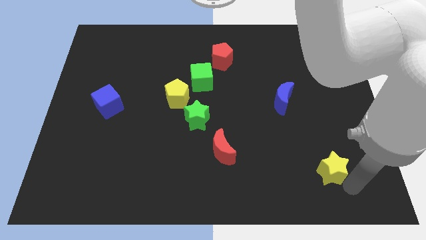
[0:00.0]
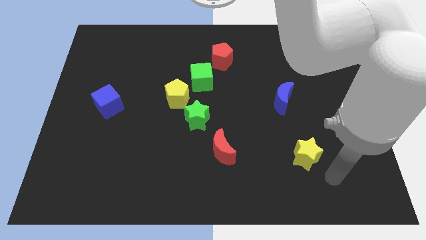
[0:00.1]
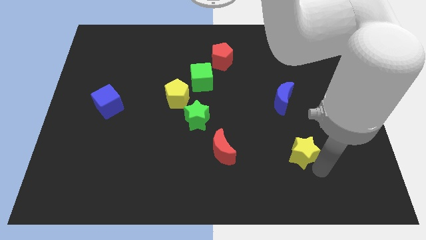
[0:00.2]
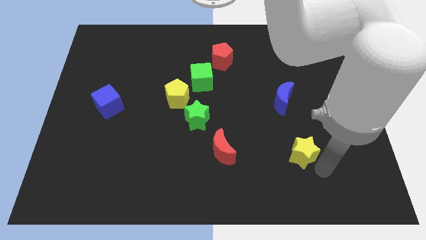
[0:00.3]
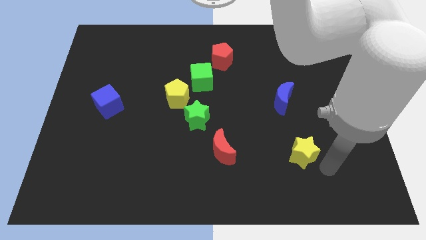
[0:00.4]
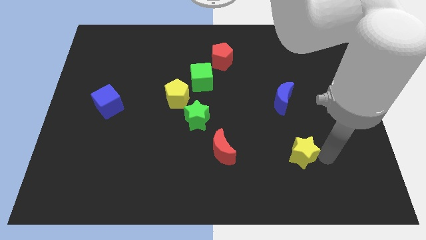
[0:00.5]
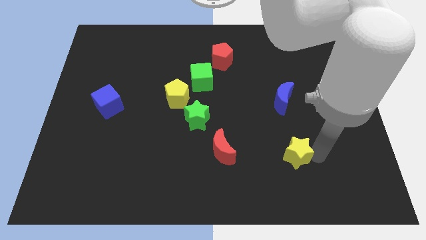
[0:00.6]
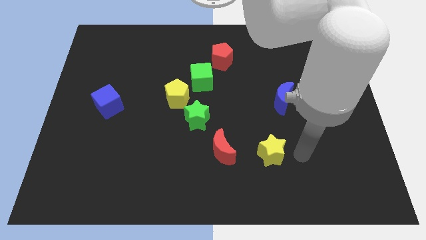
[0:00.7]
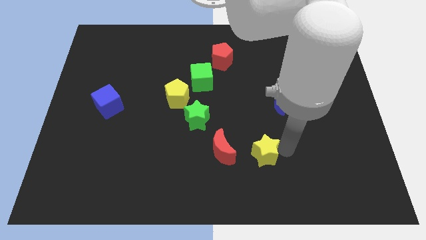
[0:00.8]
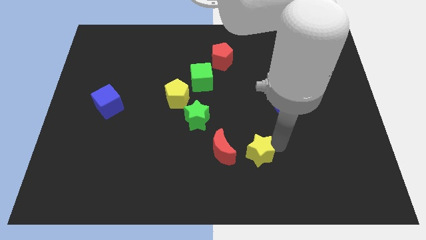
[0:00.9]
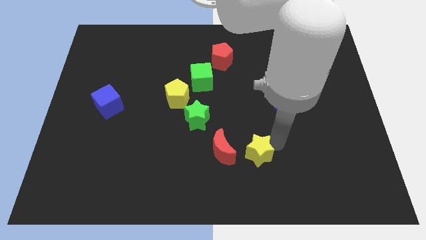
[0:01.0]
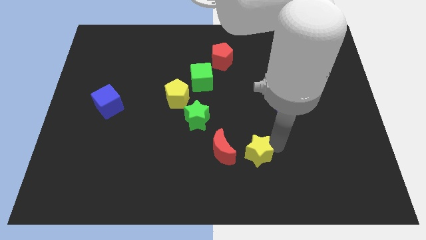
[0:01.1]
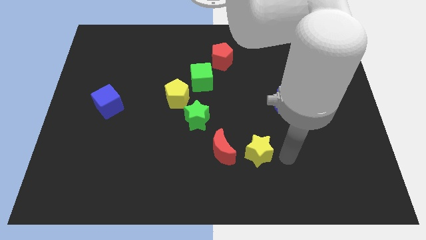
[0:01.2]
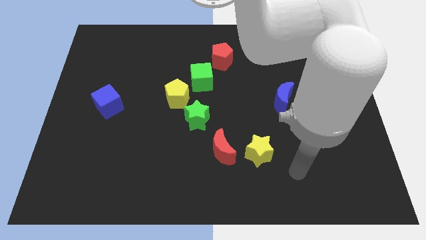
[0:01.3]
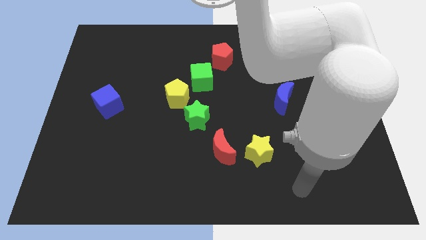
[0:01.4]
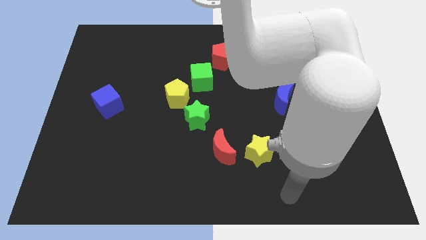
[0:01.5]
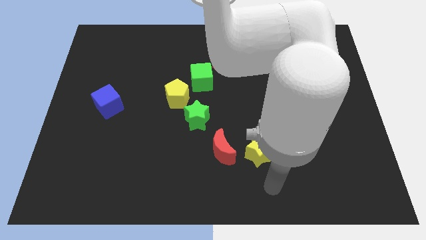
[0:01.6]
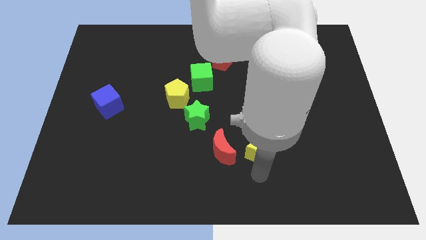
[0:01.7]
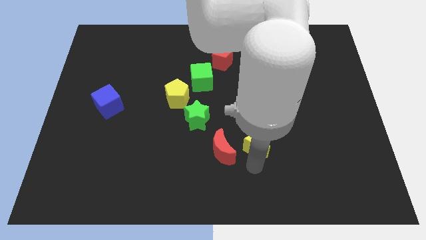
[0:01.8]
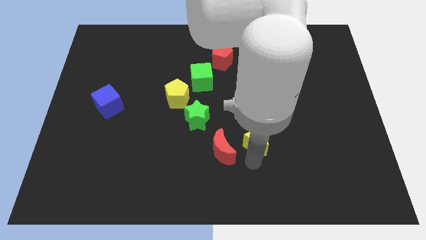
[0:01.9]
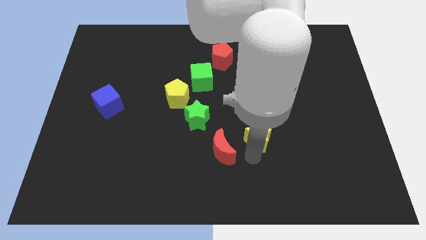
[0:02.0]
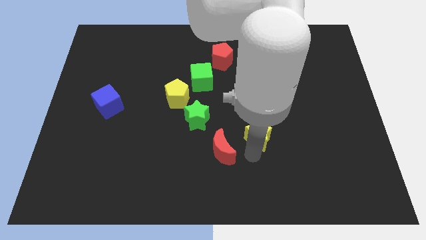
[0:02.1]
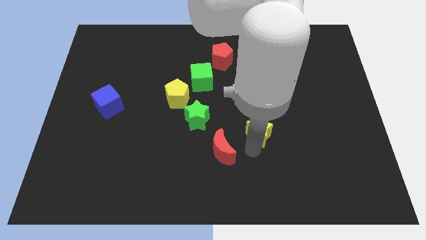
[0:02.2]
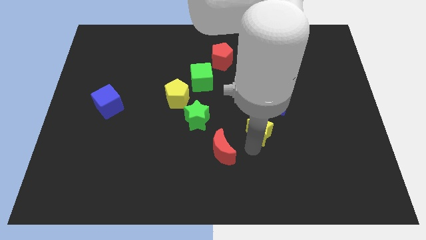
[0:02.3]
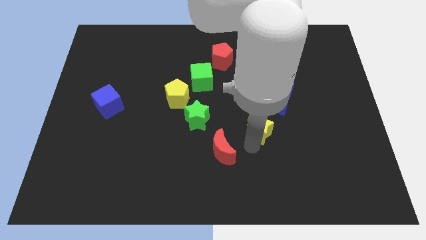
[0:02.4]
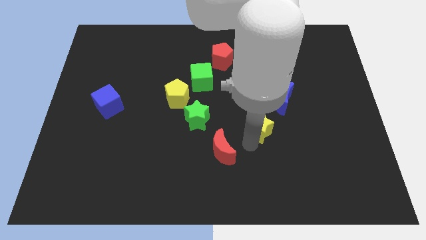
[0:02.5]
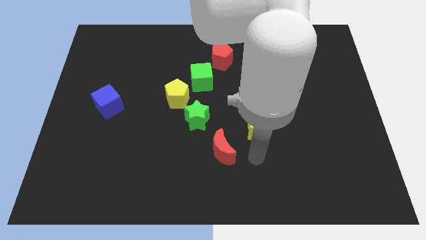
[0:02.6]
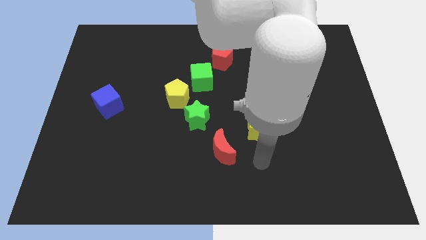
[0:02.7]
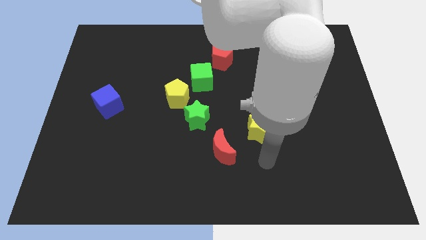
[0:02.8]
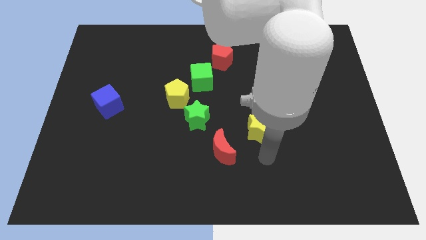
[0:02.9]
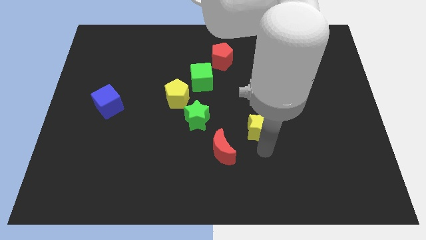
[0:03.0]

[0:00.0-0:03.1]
move yellow star to the right above red moon

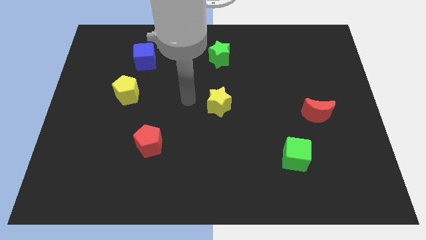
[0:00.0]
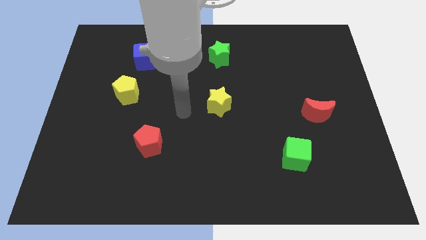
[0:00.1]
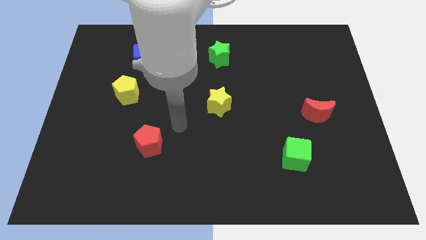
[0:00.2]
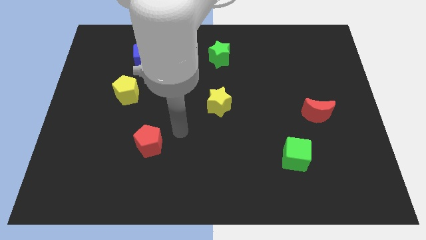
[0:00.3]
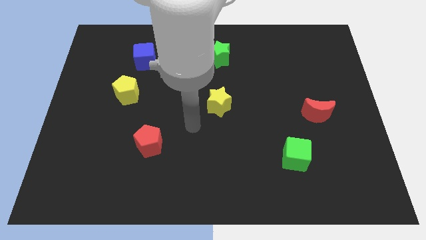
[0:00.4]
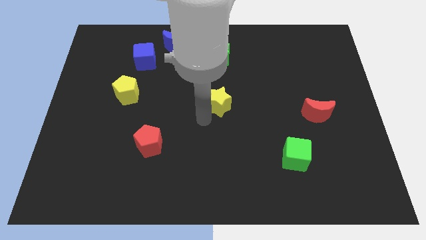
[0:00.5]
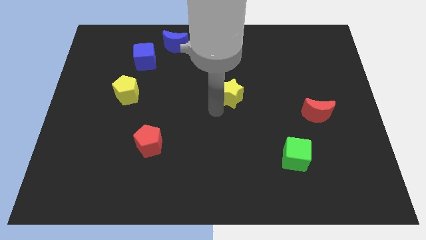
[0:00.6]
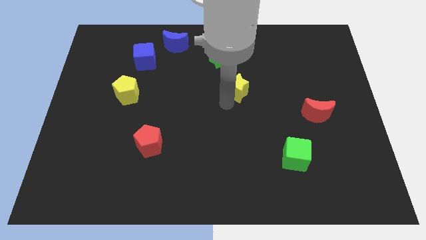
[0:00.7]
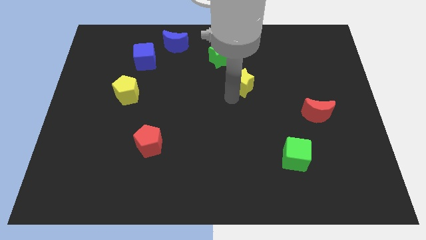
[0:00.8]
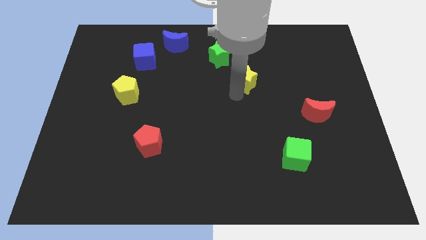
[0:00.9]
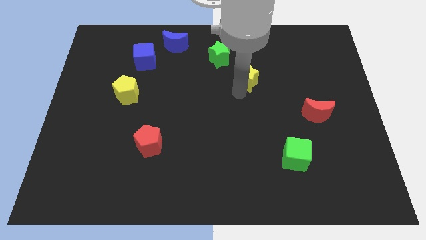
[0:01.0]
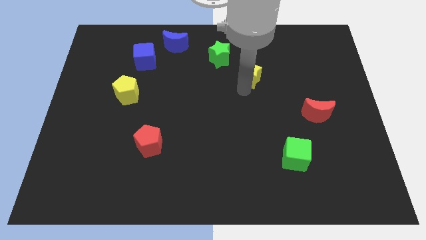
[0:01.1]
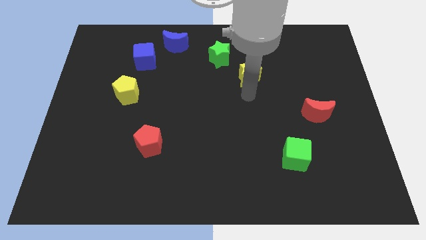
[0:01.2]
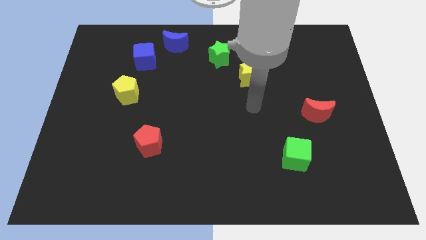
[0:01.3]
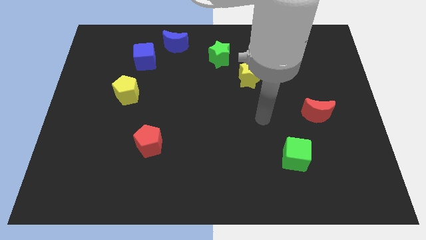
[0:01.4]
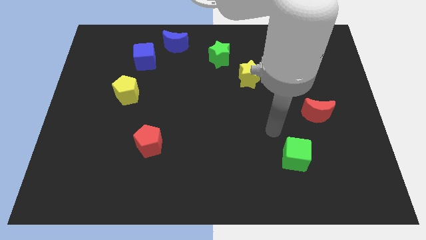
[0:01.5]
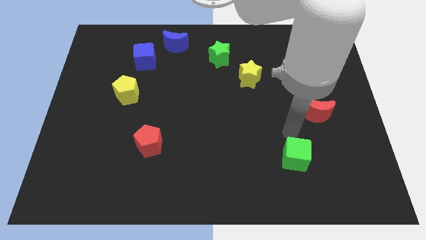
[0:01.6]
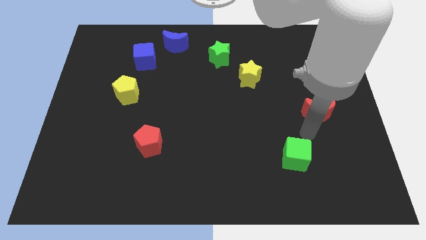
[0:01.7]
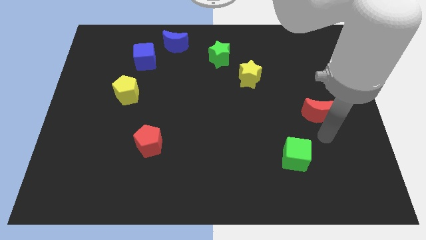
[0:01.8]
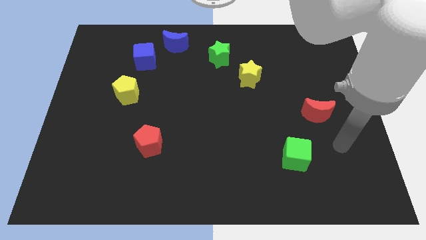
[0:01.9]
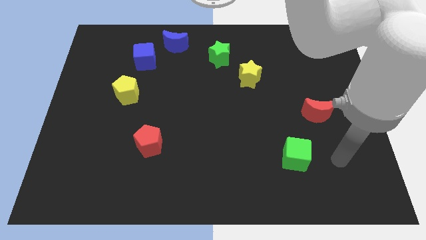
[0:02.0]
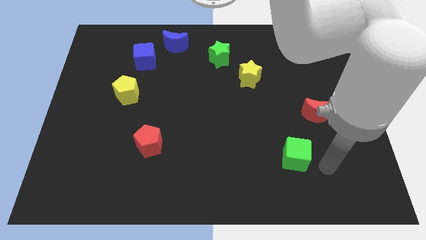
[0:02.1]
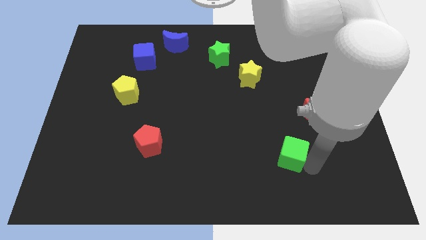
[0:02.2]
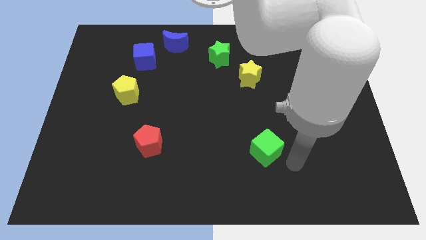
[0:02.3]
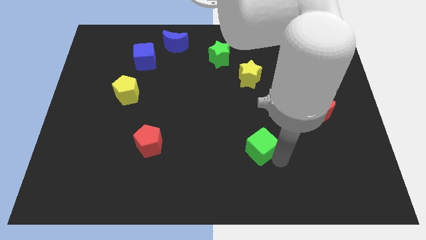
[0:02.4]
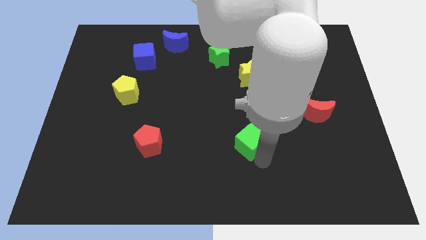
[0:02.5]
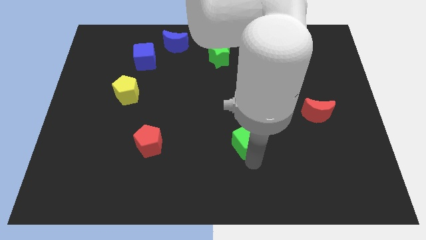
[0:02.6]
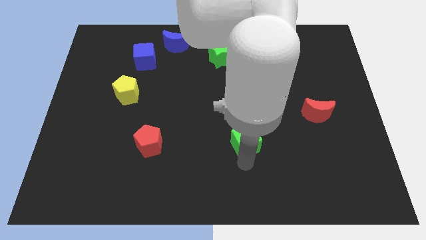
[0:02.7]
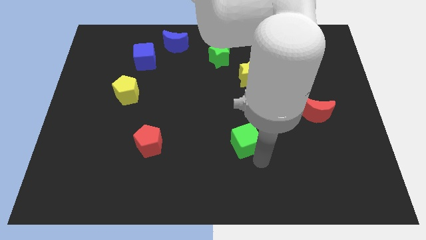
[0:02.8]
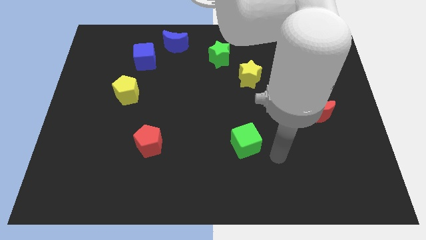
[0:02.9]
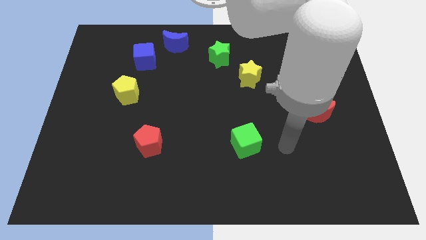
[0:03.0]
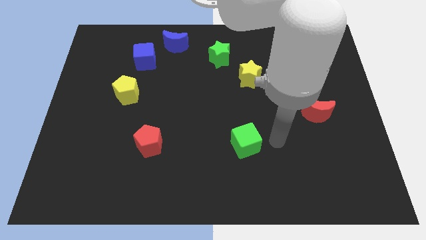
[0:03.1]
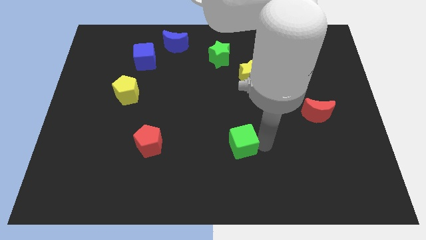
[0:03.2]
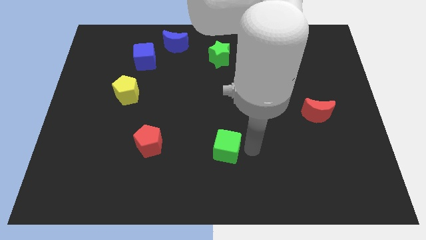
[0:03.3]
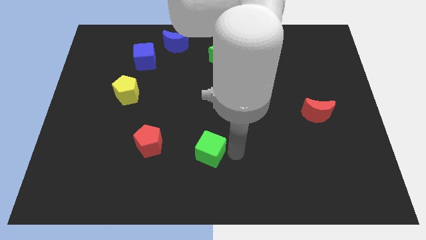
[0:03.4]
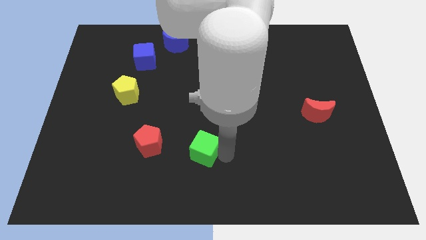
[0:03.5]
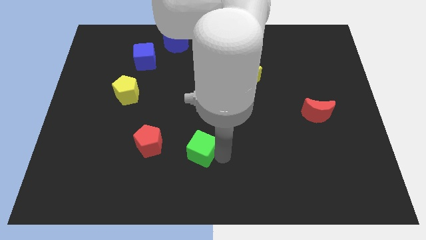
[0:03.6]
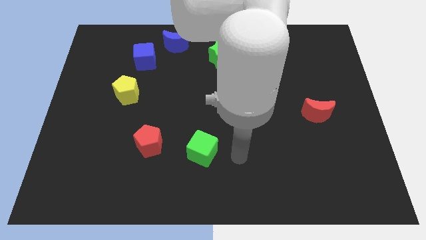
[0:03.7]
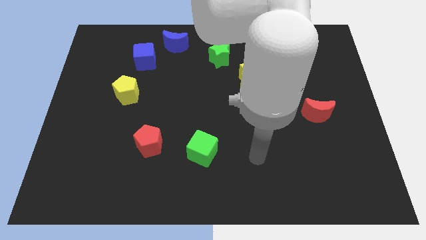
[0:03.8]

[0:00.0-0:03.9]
push the green cube towards the right to the red pentagon

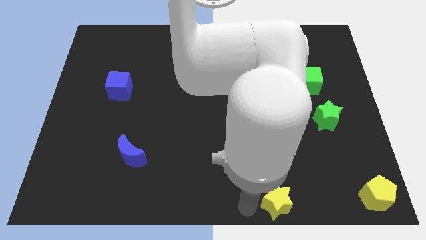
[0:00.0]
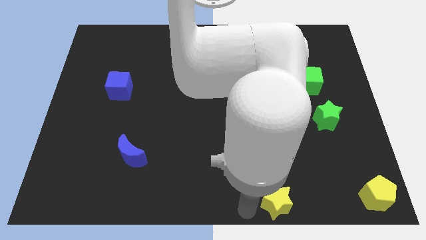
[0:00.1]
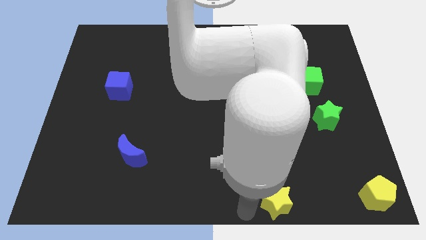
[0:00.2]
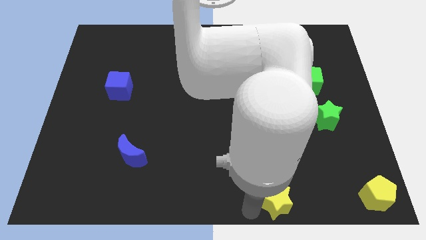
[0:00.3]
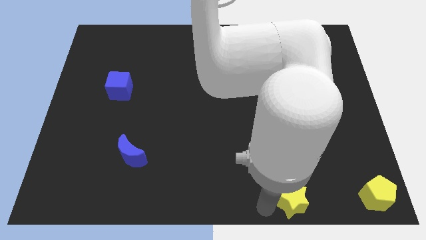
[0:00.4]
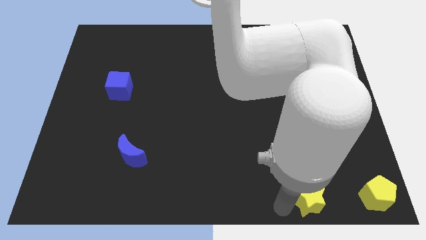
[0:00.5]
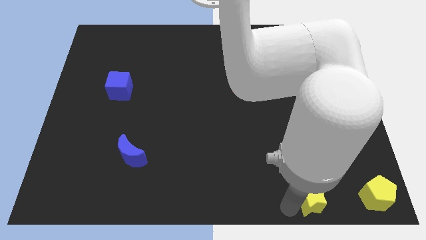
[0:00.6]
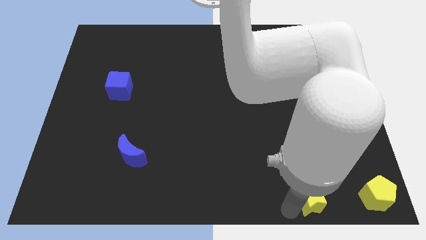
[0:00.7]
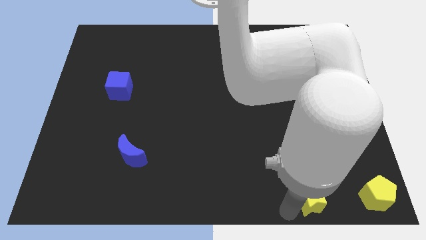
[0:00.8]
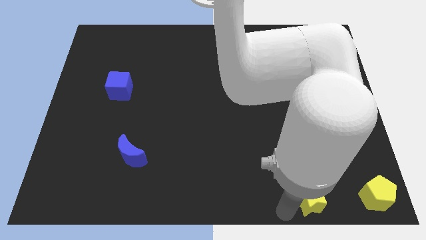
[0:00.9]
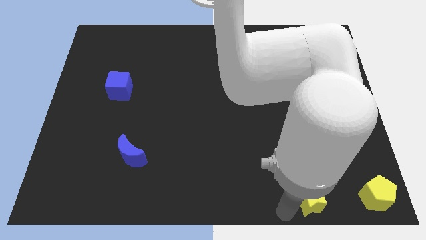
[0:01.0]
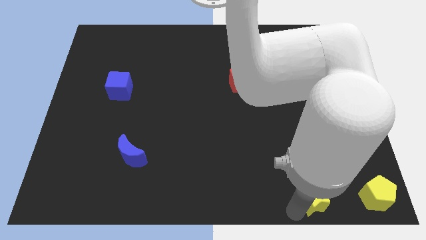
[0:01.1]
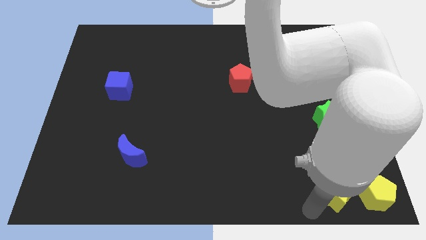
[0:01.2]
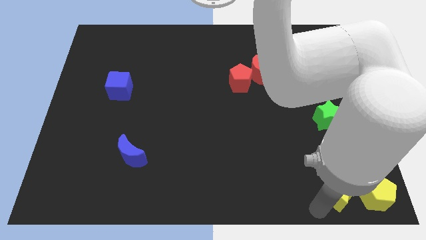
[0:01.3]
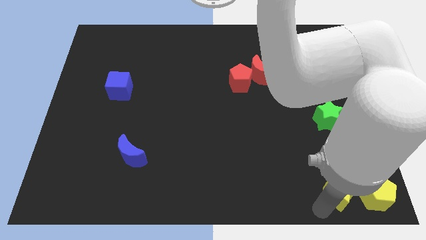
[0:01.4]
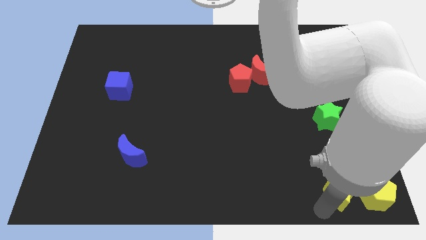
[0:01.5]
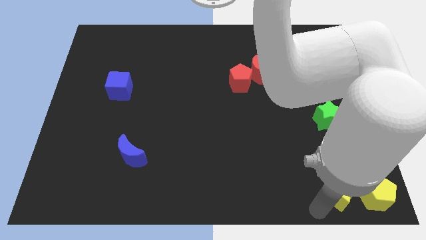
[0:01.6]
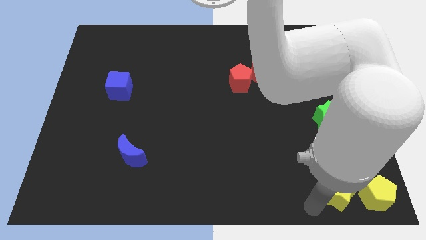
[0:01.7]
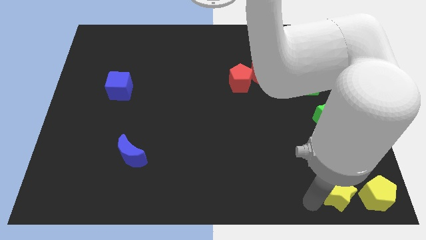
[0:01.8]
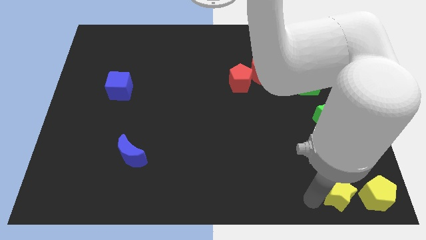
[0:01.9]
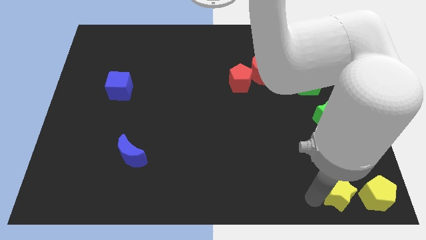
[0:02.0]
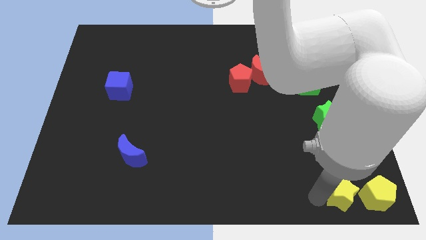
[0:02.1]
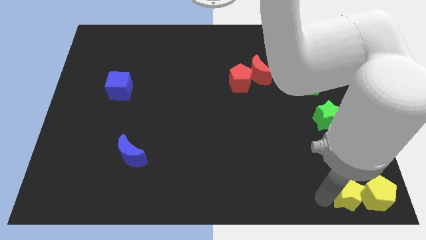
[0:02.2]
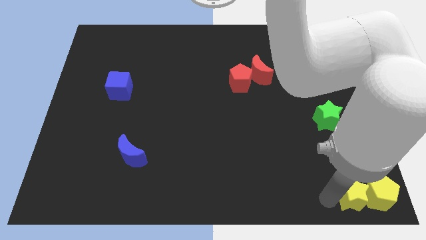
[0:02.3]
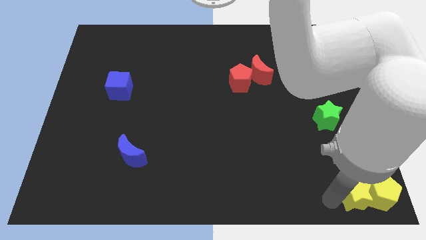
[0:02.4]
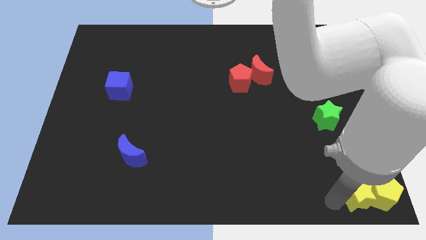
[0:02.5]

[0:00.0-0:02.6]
place the yellow star left to the yellow pentagon
